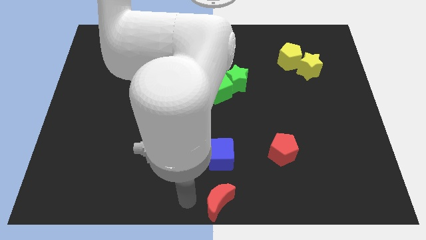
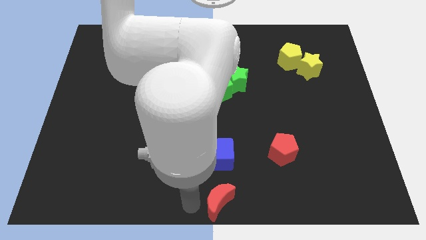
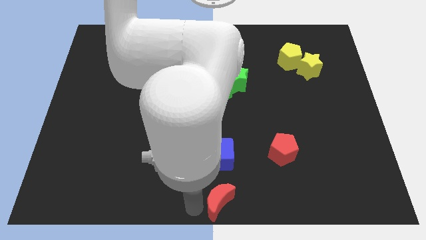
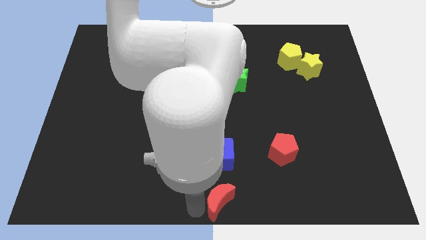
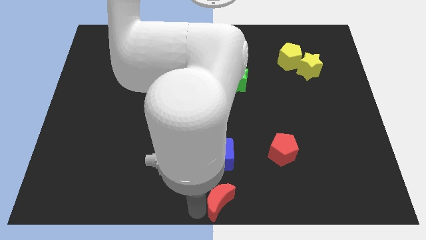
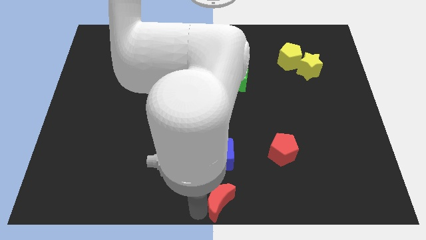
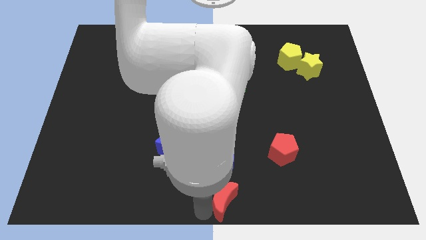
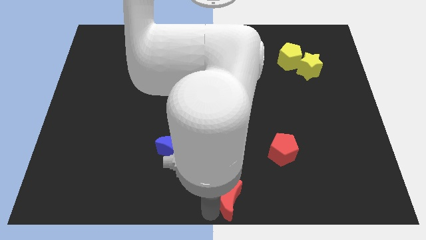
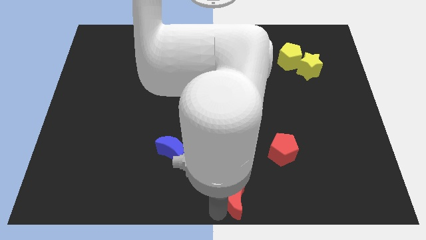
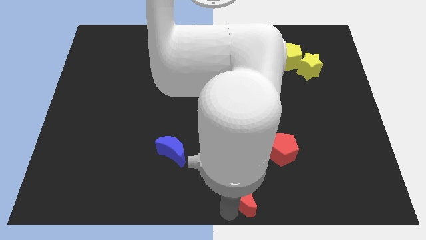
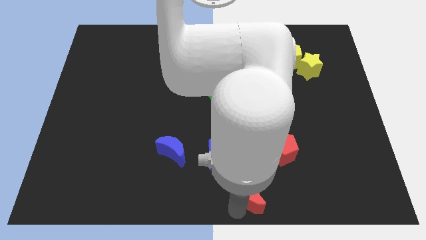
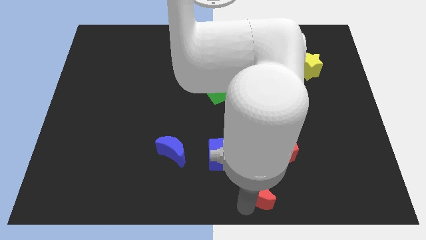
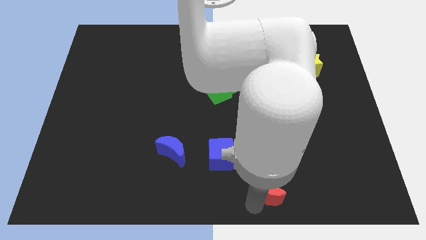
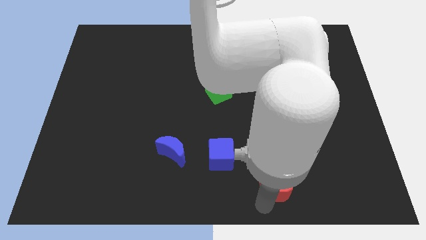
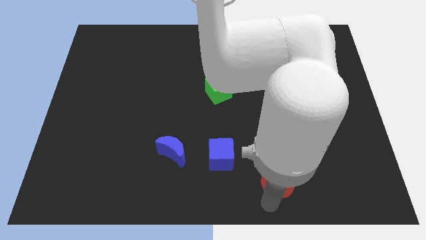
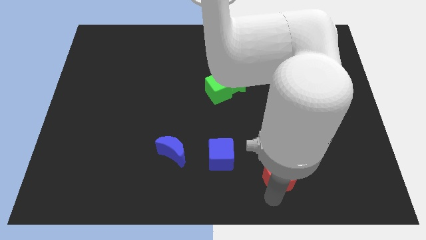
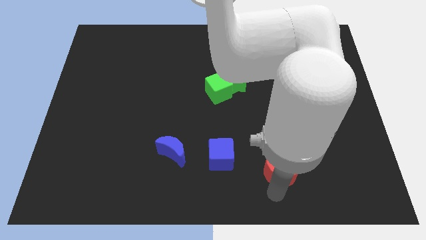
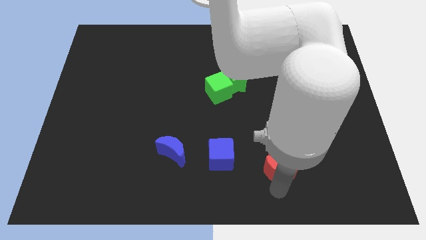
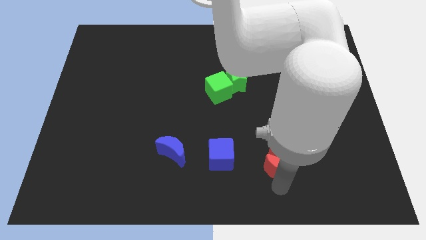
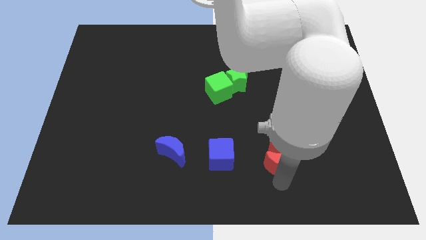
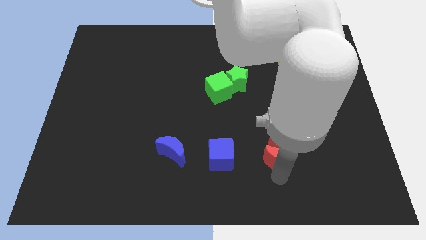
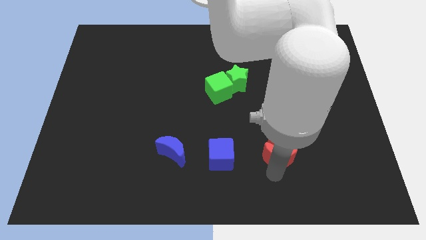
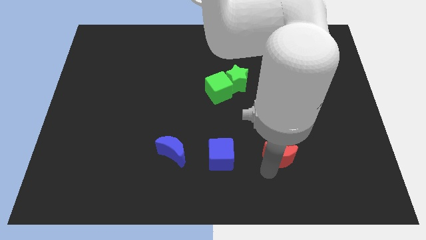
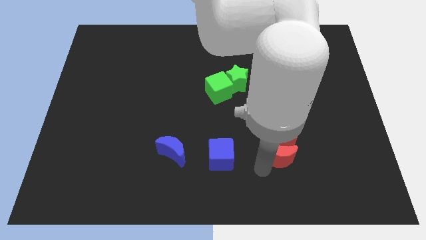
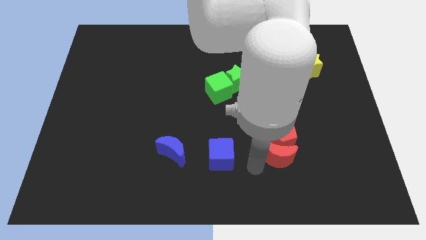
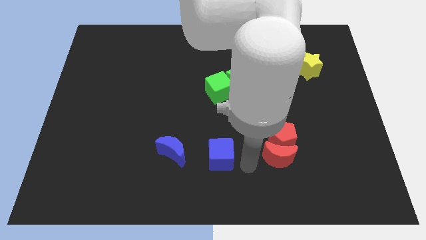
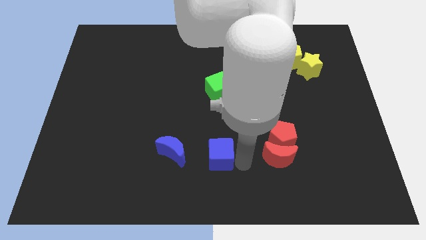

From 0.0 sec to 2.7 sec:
push the red moon into the red pentagon

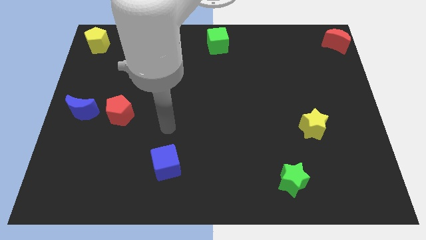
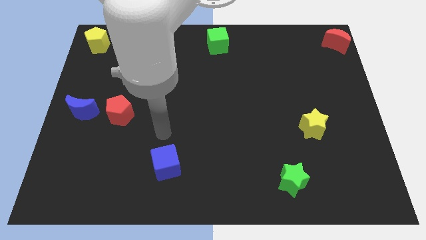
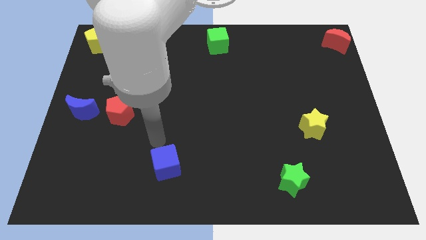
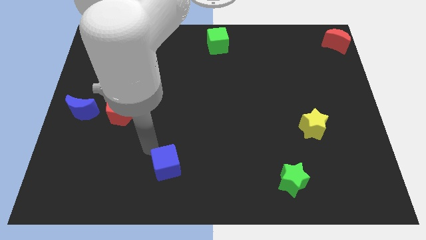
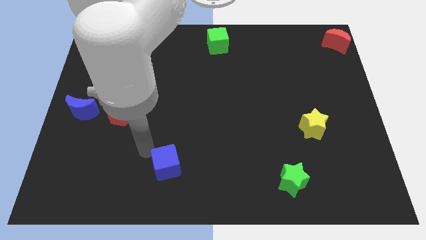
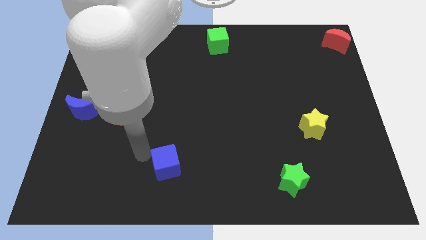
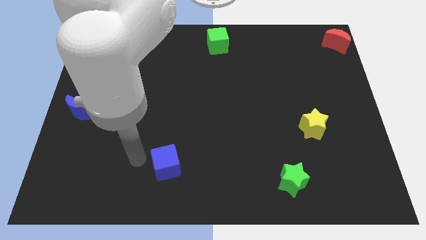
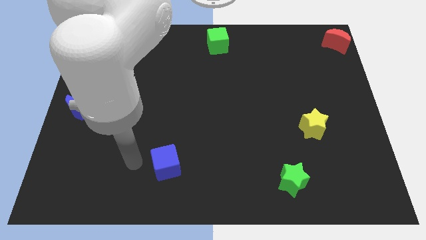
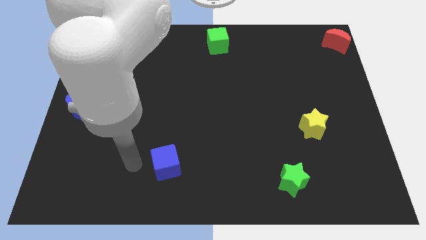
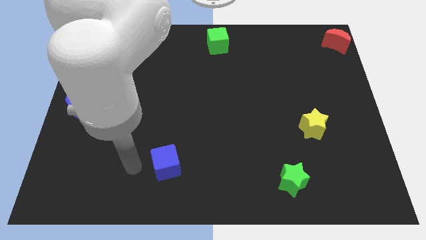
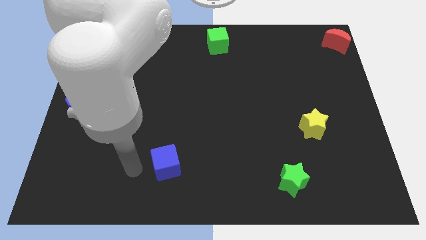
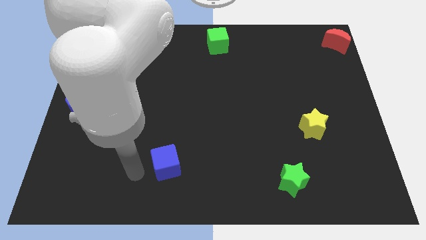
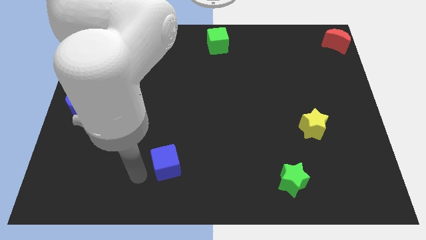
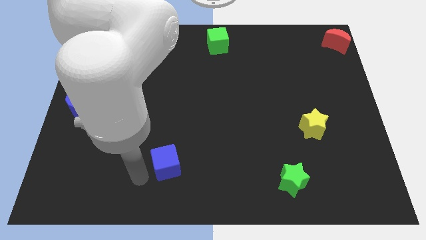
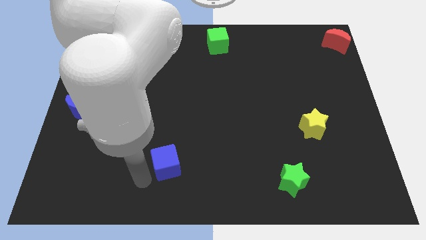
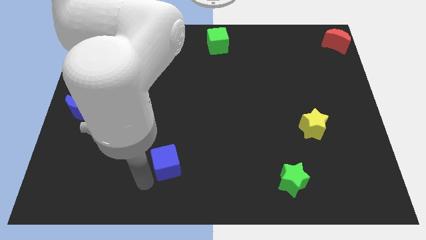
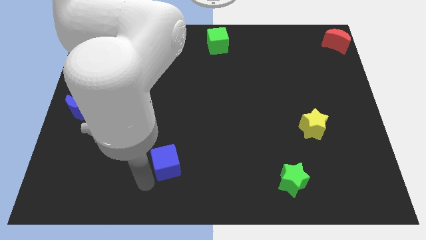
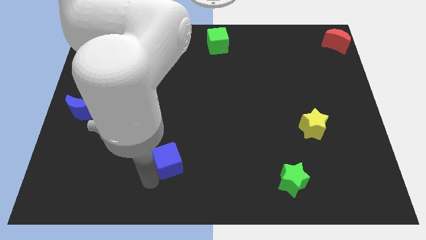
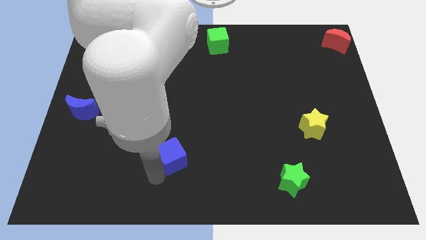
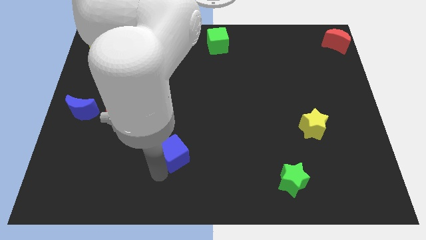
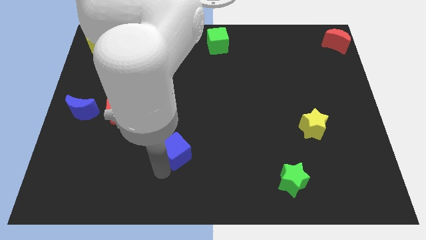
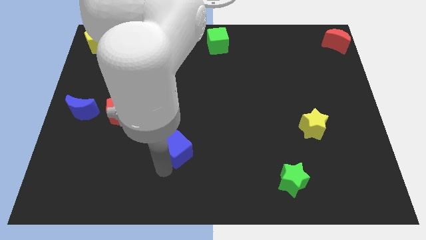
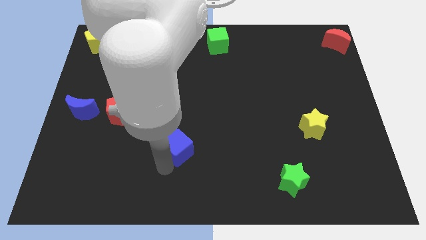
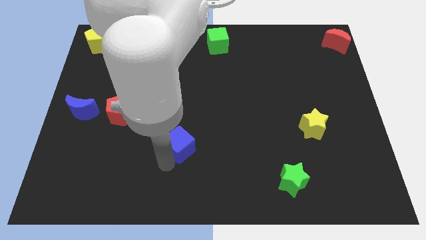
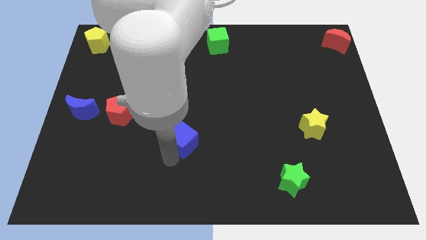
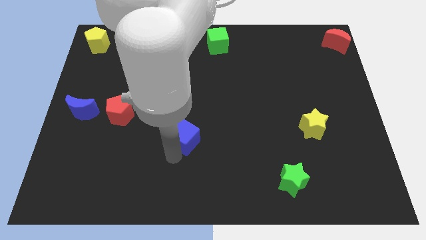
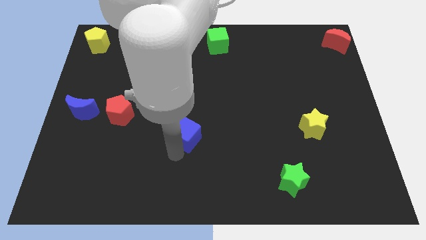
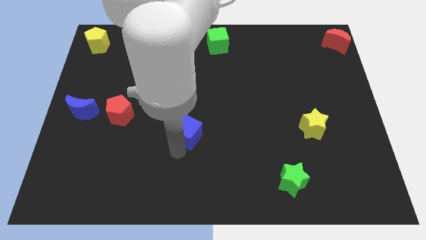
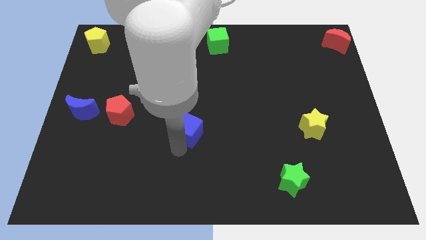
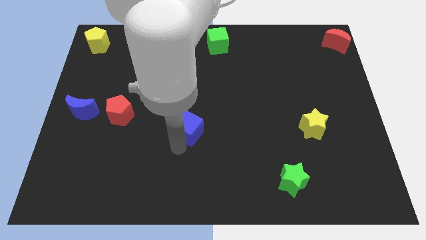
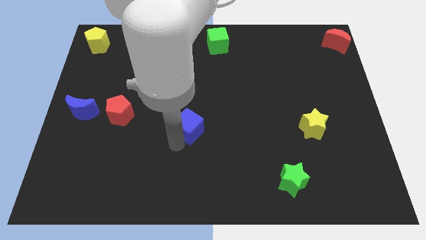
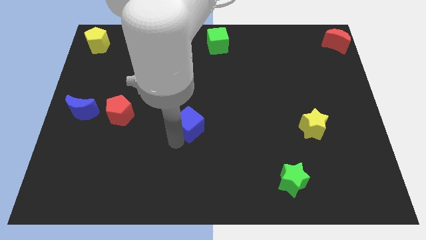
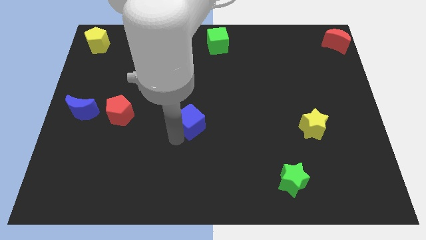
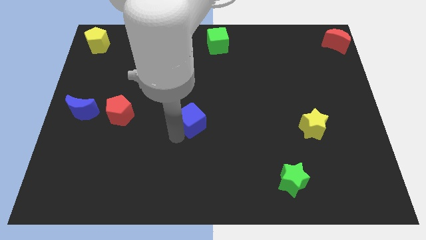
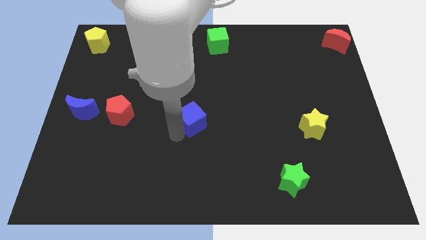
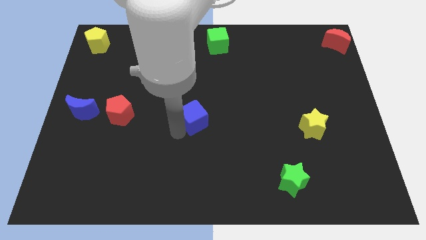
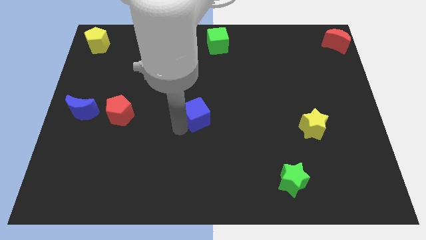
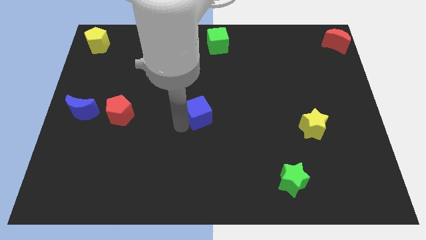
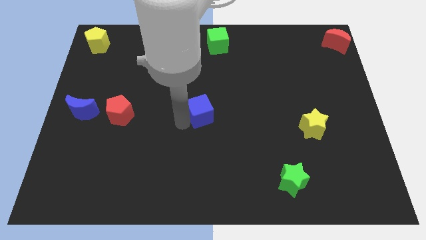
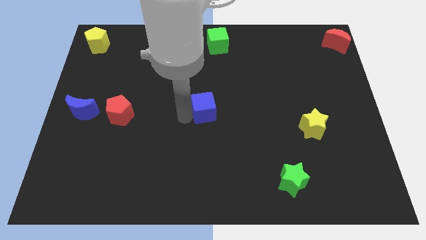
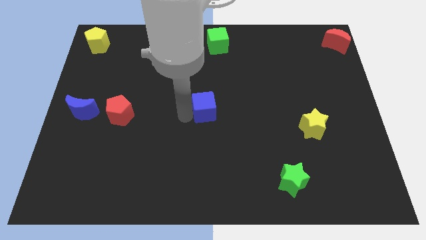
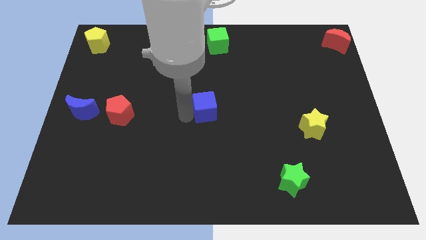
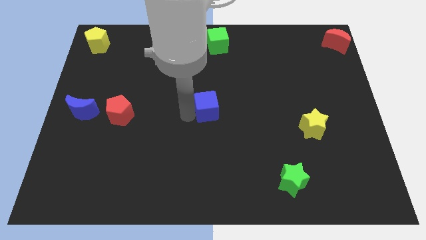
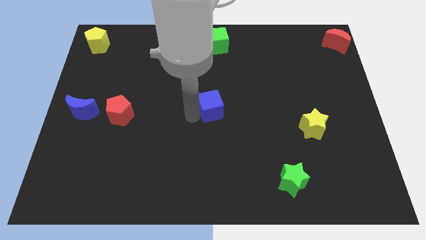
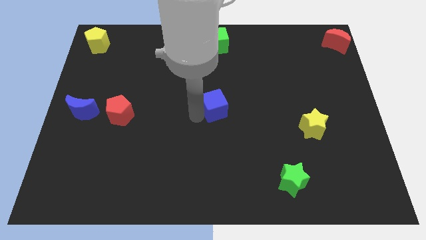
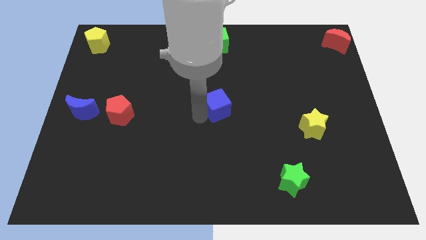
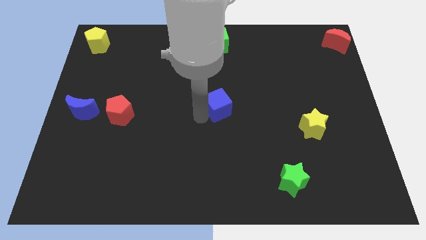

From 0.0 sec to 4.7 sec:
push the blue cube to the center of the board

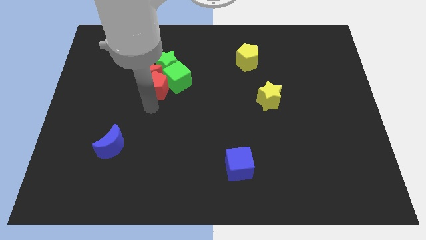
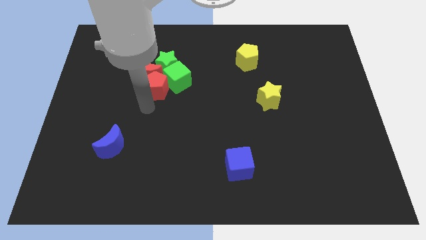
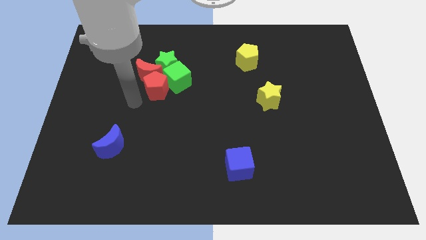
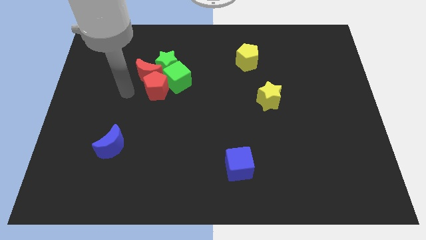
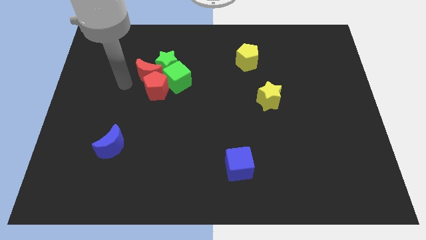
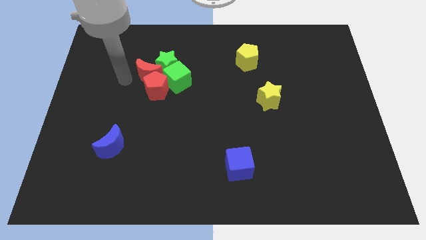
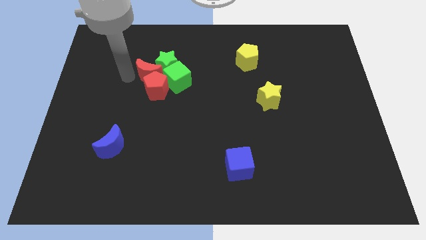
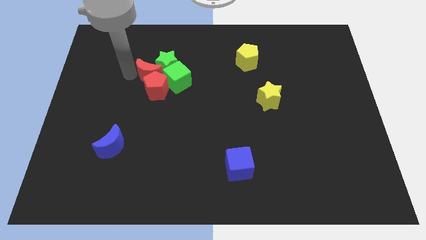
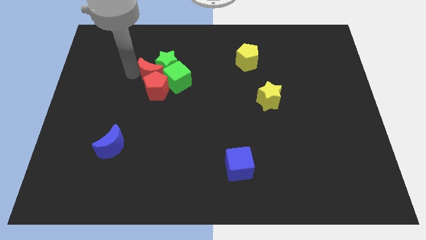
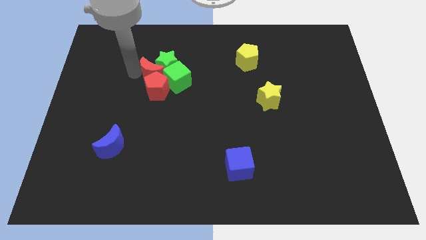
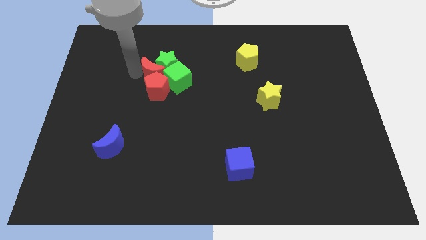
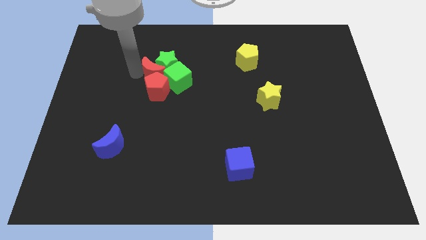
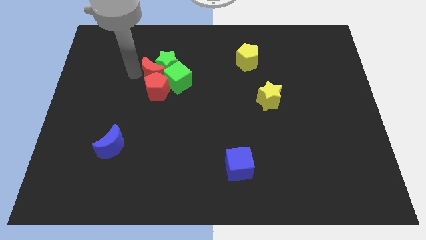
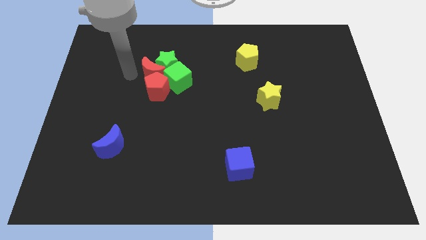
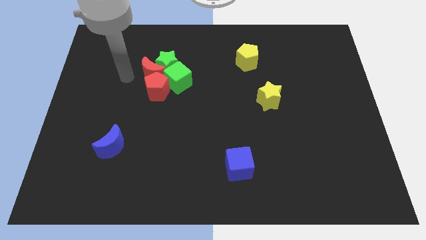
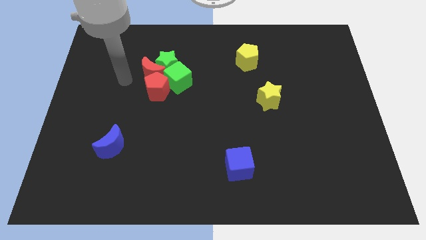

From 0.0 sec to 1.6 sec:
slightly touch to the red crescent
